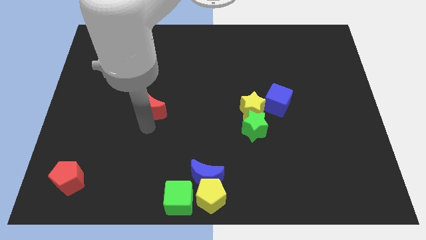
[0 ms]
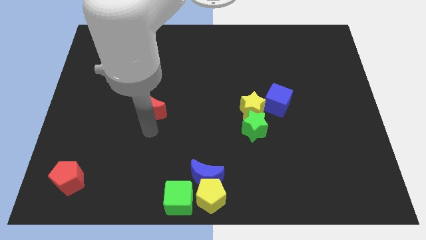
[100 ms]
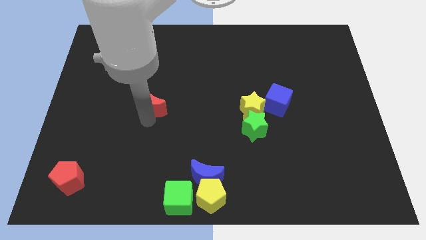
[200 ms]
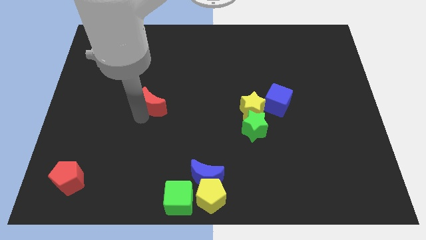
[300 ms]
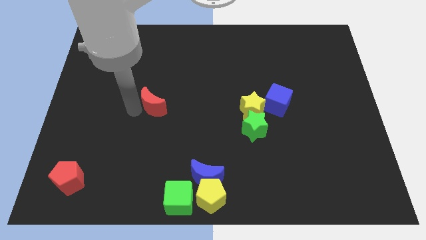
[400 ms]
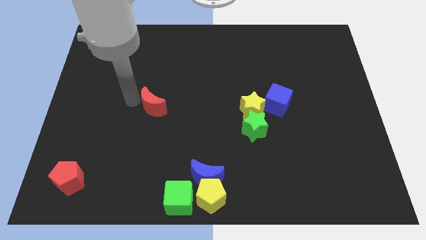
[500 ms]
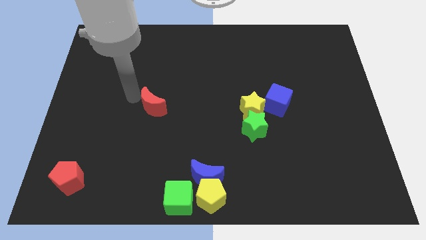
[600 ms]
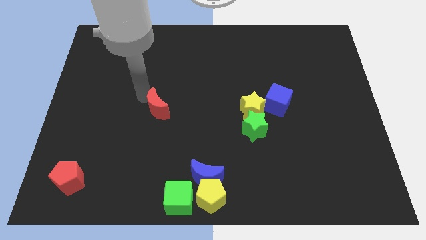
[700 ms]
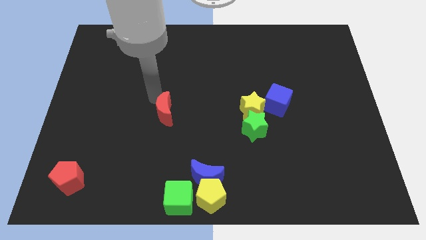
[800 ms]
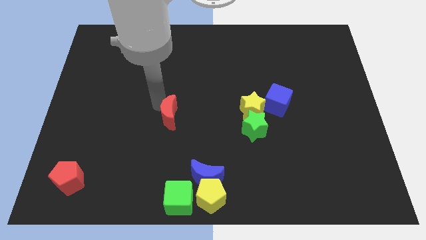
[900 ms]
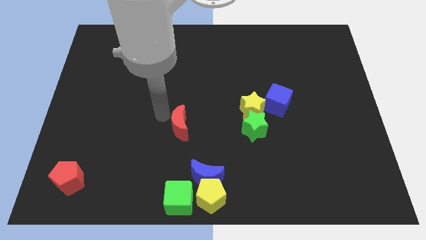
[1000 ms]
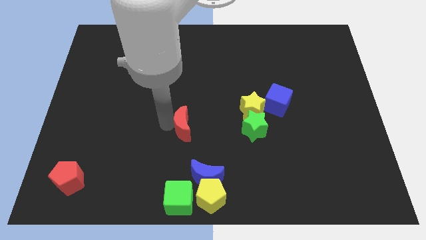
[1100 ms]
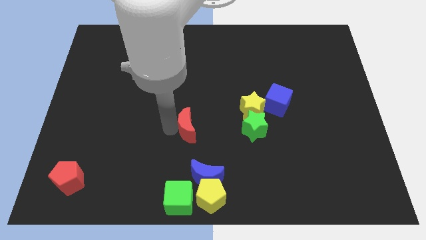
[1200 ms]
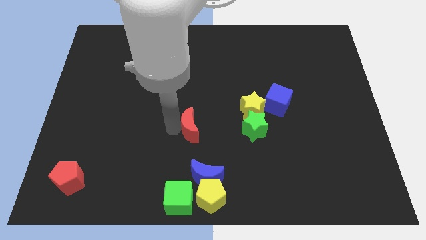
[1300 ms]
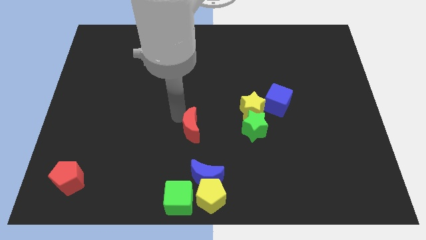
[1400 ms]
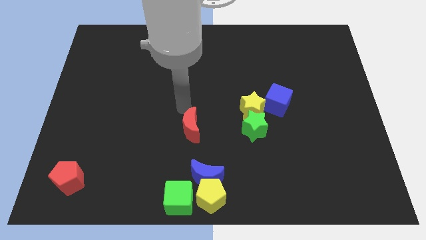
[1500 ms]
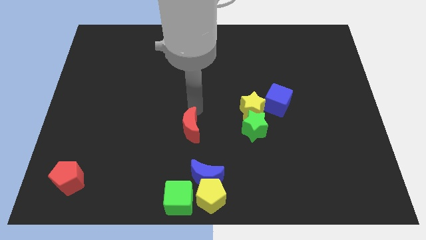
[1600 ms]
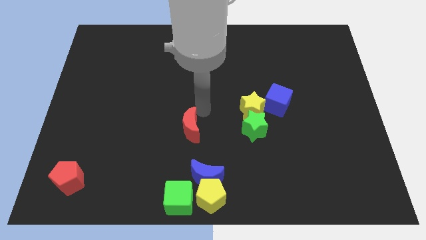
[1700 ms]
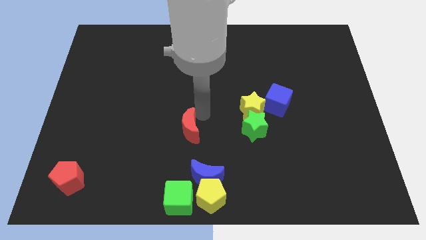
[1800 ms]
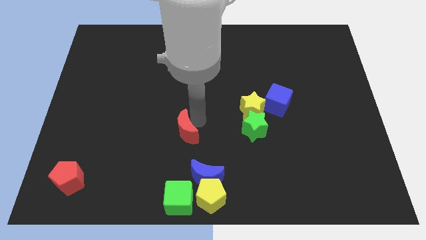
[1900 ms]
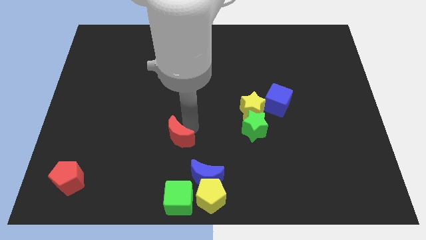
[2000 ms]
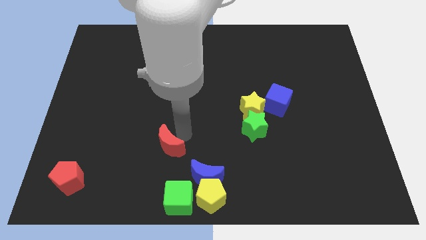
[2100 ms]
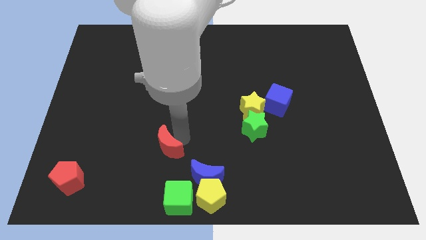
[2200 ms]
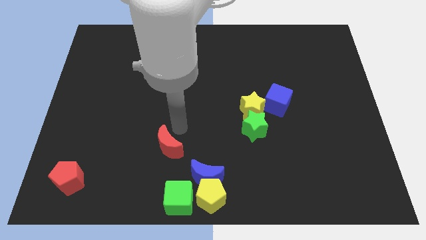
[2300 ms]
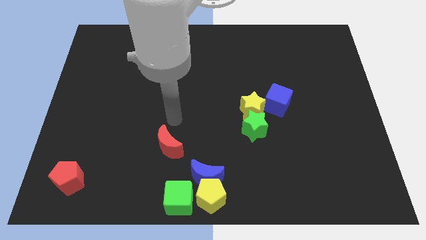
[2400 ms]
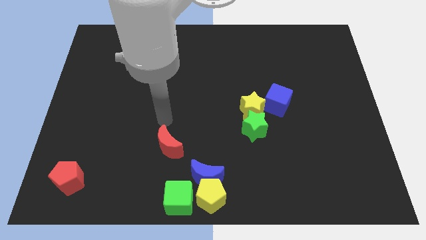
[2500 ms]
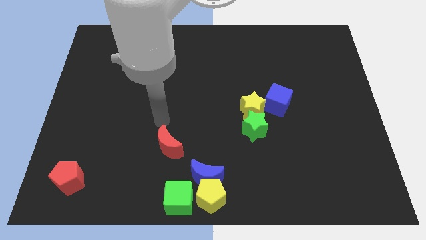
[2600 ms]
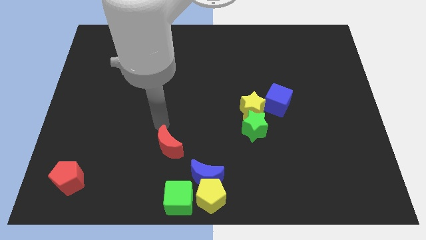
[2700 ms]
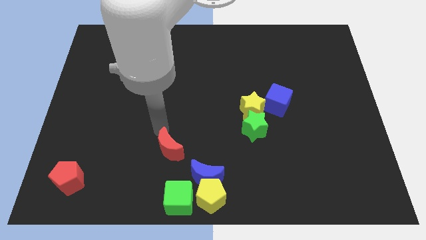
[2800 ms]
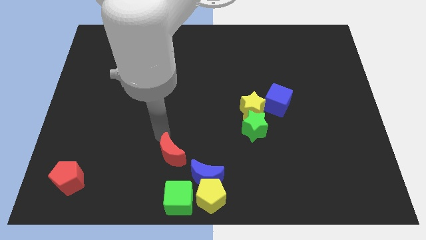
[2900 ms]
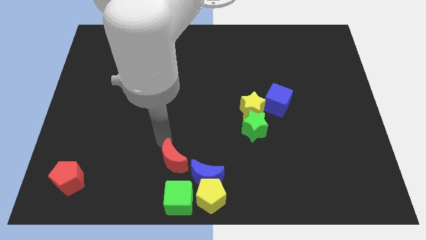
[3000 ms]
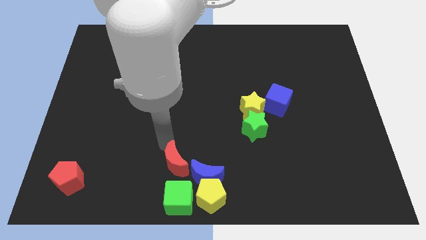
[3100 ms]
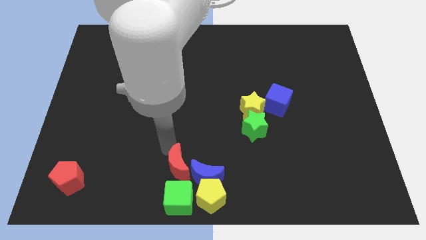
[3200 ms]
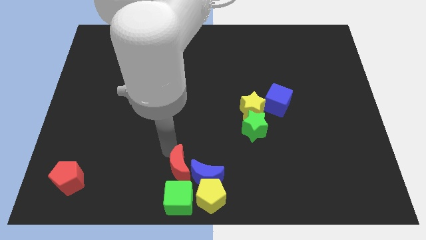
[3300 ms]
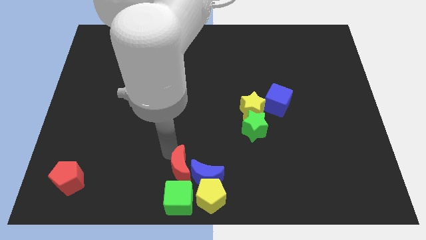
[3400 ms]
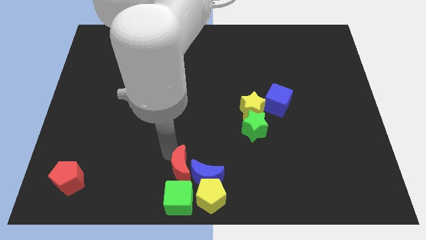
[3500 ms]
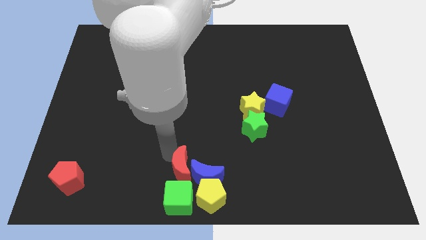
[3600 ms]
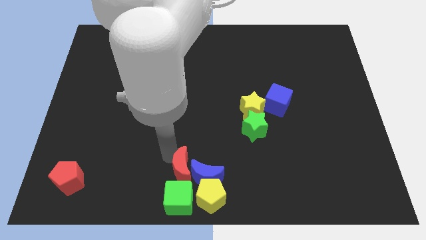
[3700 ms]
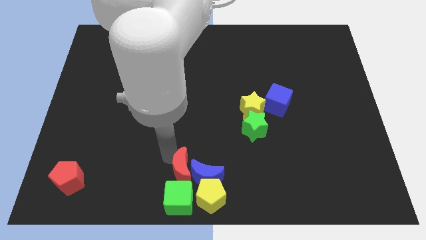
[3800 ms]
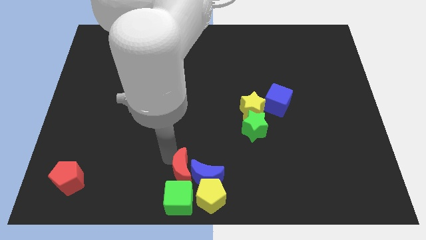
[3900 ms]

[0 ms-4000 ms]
place the red moon left to the blue moon

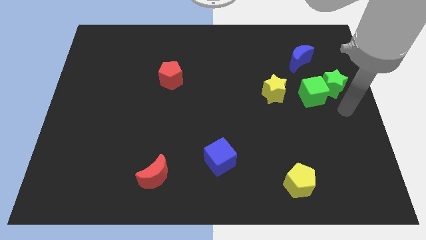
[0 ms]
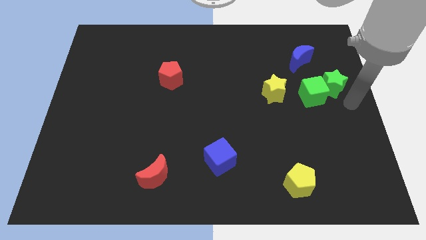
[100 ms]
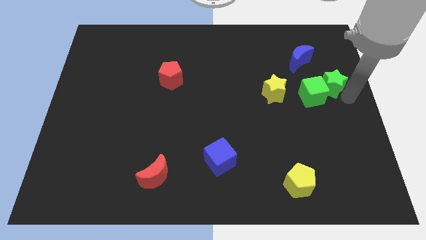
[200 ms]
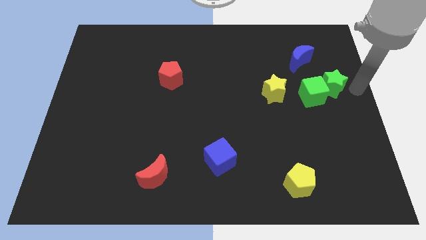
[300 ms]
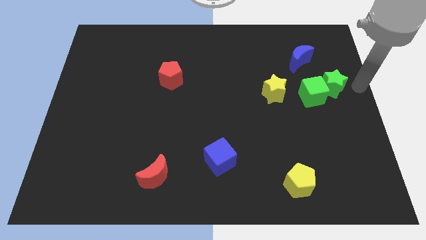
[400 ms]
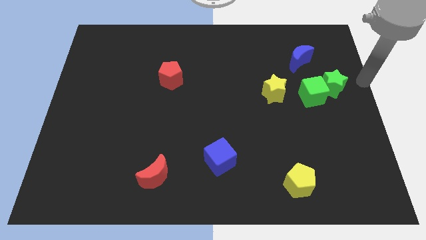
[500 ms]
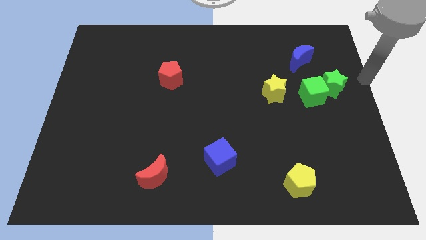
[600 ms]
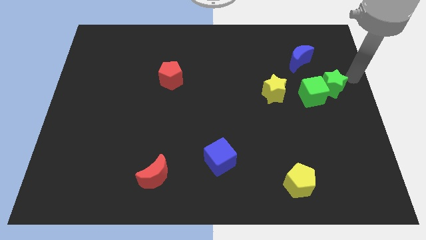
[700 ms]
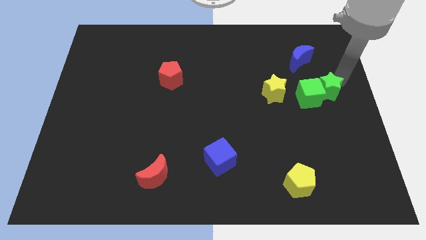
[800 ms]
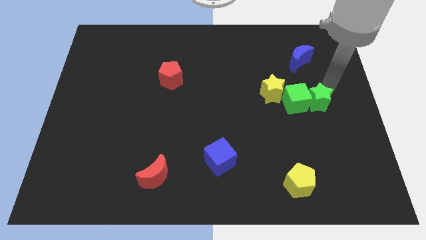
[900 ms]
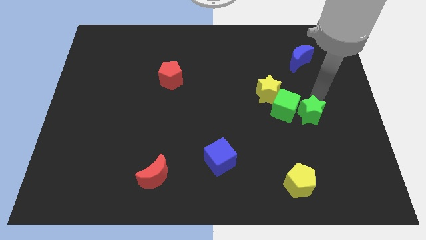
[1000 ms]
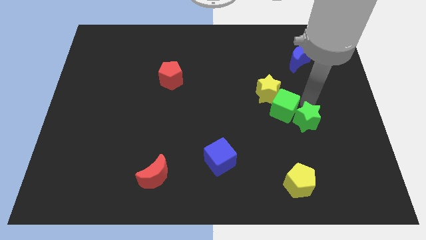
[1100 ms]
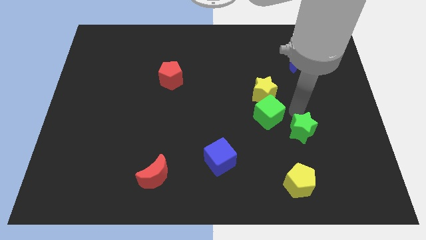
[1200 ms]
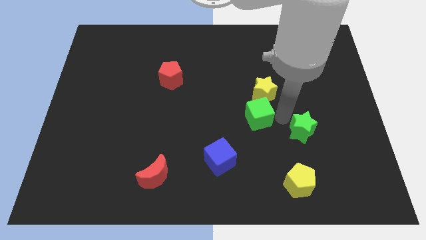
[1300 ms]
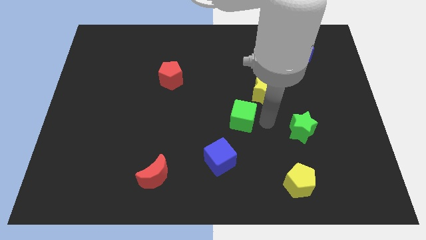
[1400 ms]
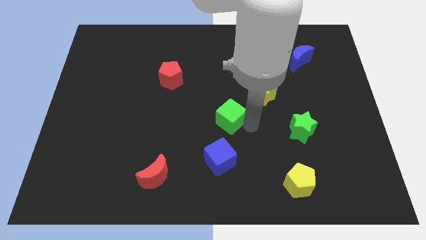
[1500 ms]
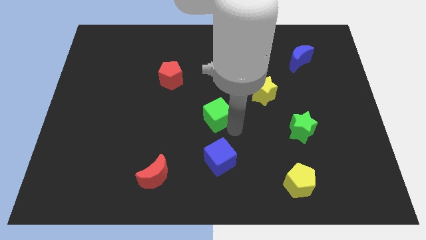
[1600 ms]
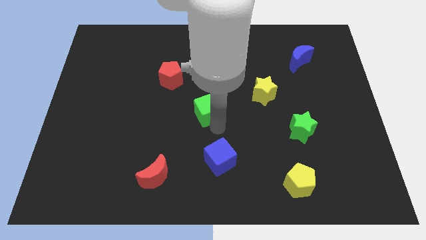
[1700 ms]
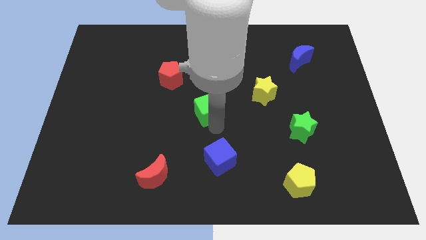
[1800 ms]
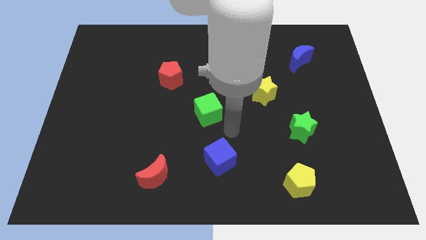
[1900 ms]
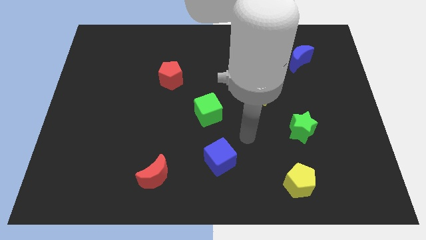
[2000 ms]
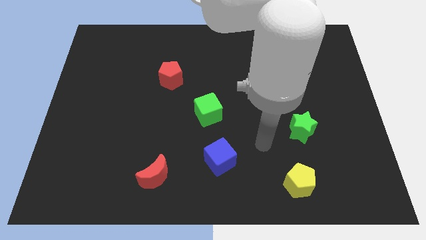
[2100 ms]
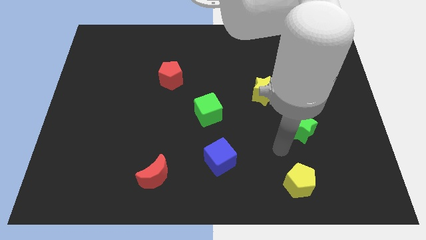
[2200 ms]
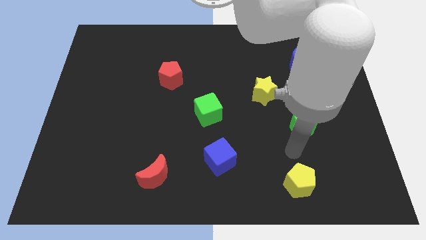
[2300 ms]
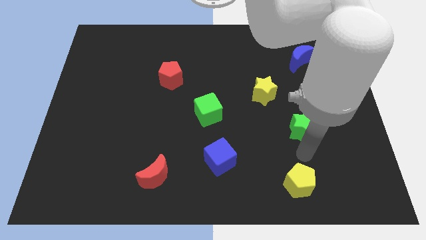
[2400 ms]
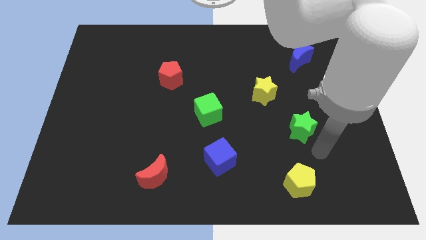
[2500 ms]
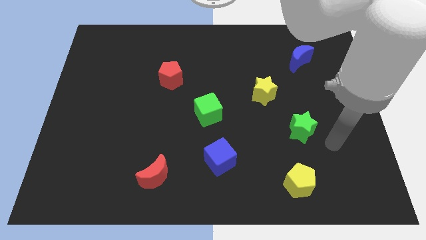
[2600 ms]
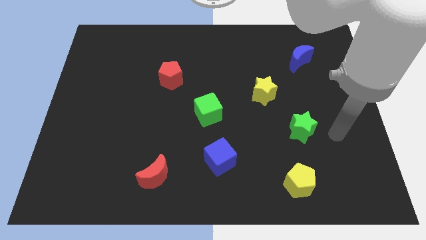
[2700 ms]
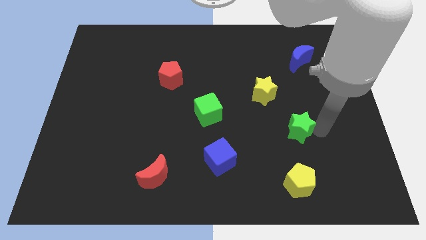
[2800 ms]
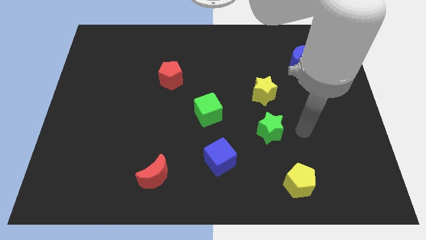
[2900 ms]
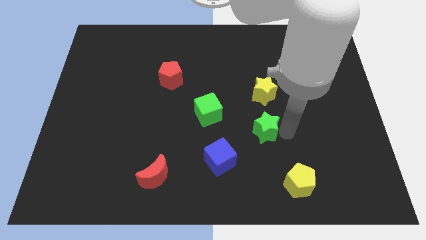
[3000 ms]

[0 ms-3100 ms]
place the green star in between the yellow star and yellow pentagon

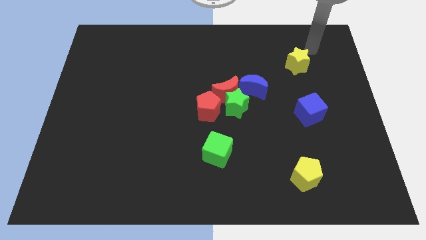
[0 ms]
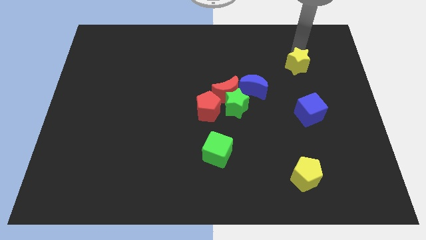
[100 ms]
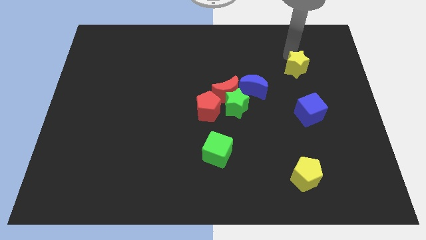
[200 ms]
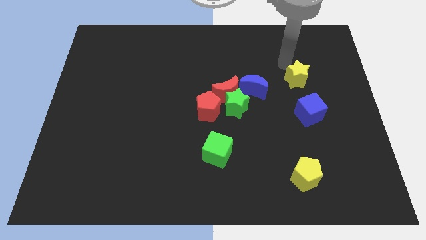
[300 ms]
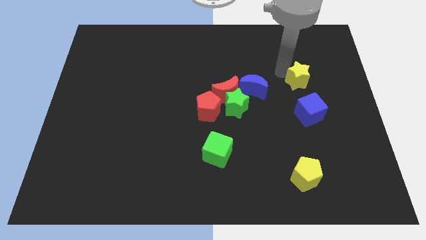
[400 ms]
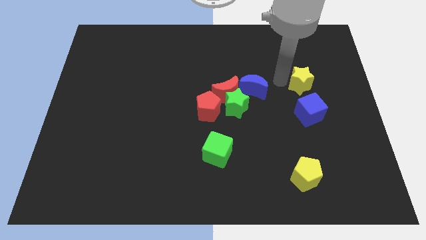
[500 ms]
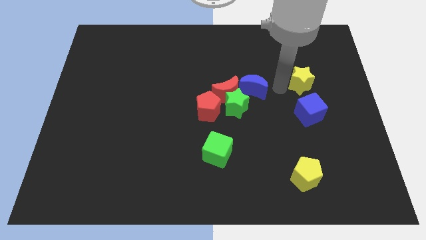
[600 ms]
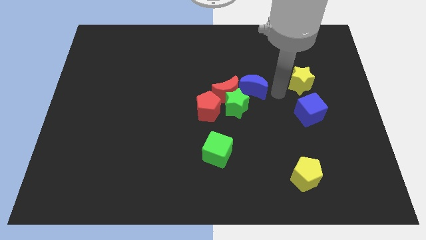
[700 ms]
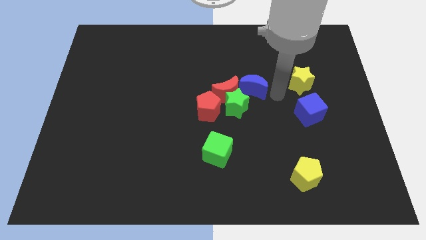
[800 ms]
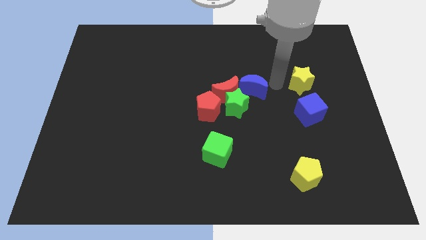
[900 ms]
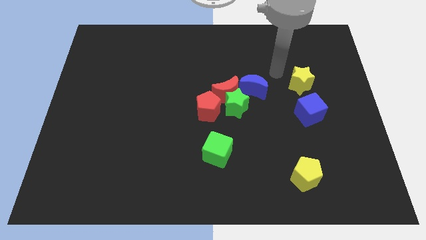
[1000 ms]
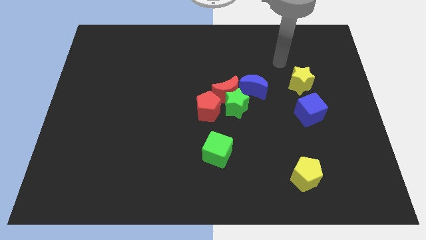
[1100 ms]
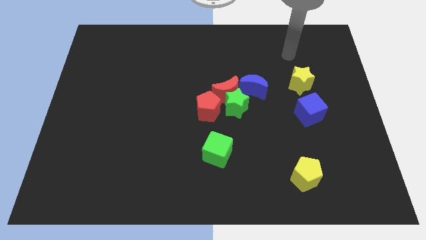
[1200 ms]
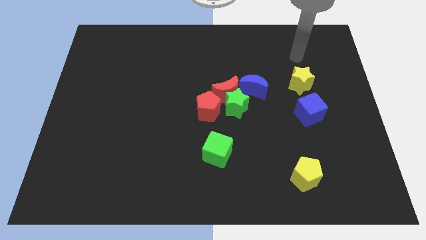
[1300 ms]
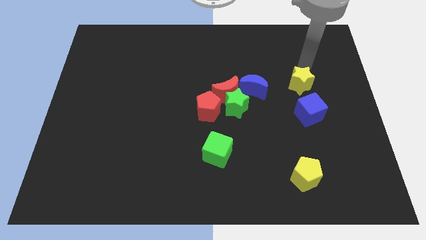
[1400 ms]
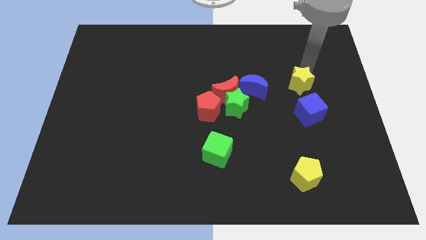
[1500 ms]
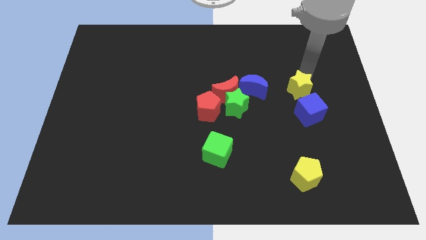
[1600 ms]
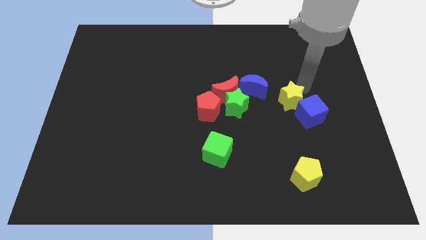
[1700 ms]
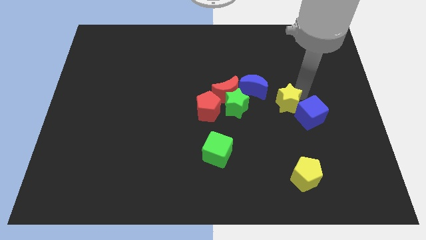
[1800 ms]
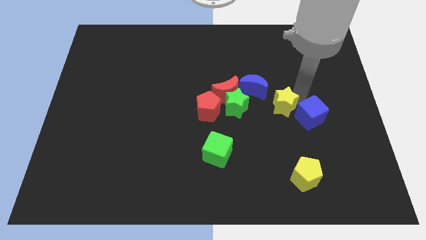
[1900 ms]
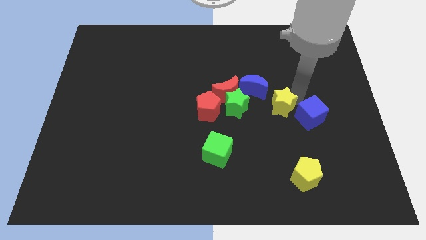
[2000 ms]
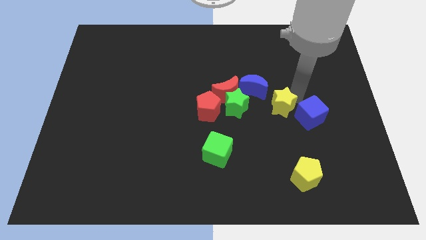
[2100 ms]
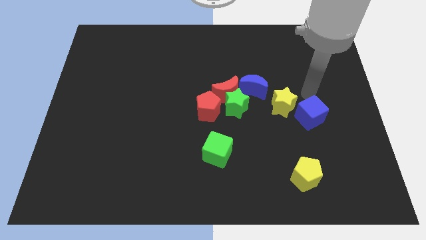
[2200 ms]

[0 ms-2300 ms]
move yellow star in between blue blocks
